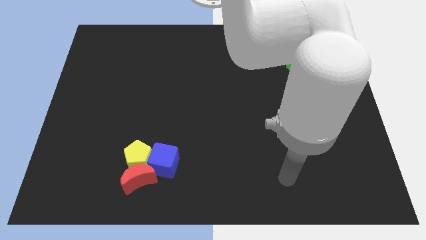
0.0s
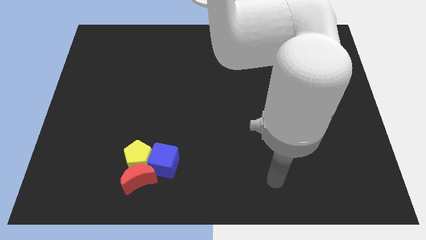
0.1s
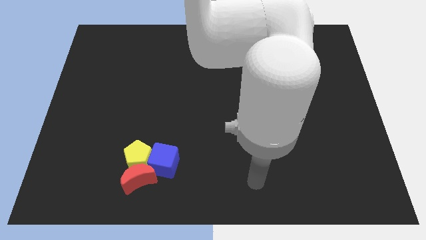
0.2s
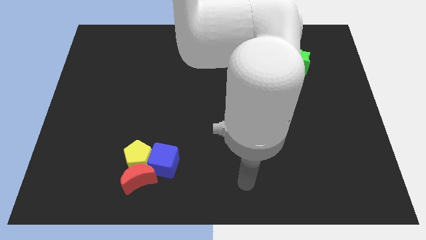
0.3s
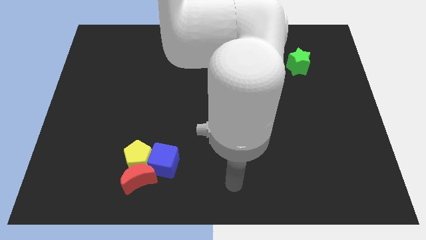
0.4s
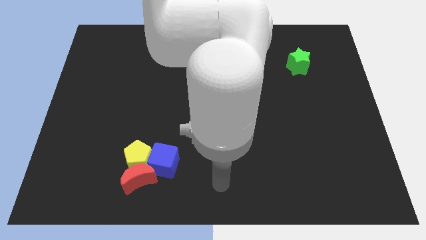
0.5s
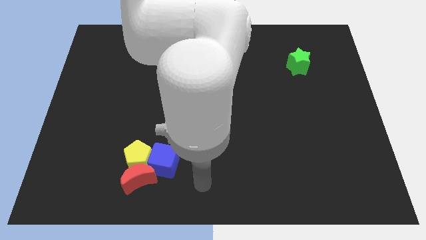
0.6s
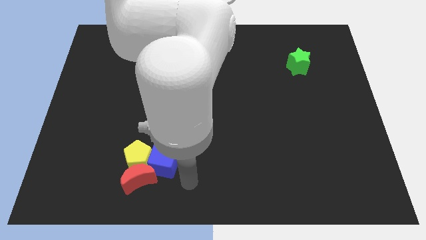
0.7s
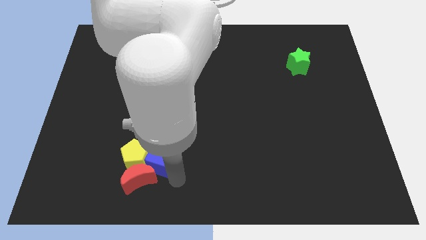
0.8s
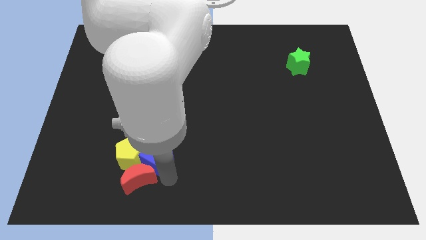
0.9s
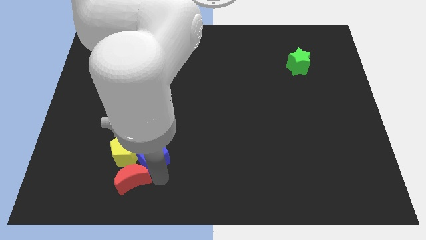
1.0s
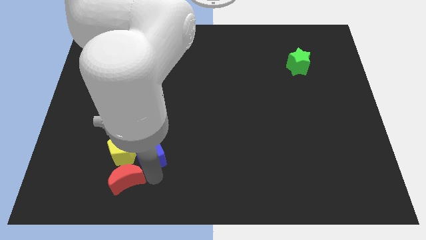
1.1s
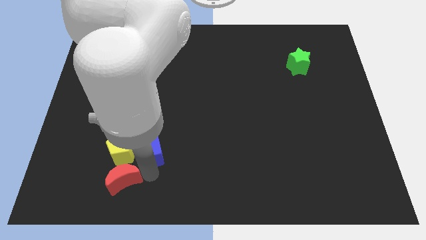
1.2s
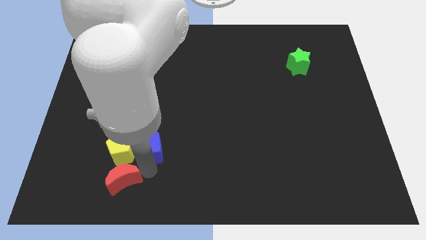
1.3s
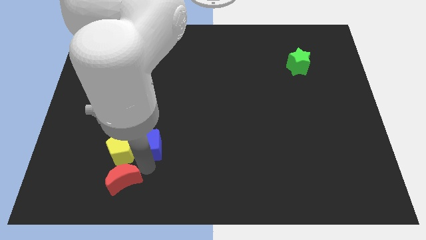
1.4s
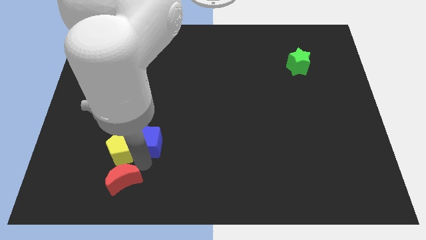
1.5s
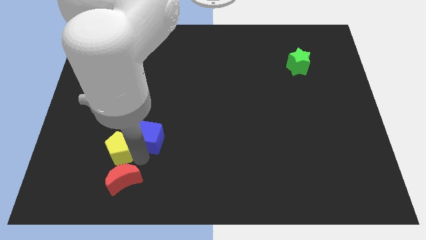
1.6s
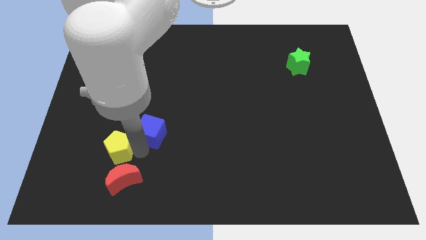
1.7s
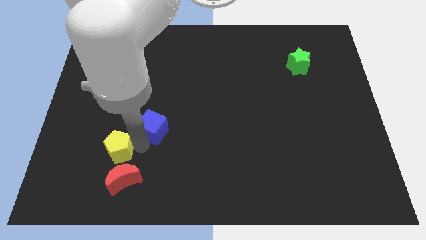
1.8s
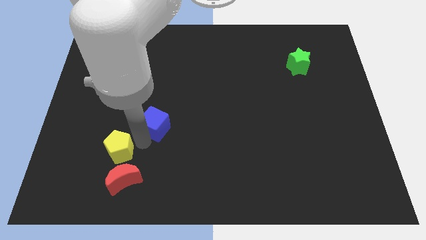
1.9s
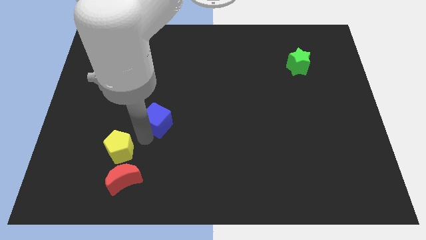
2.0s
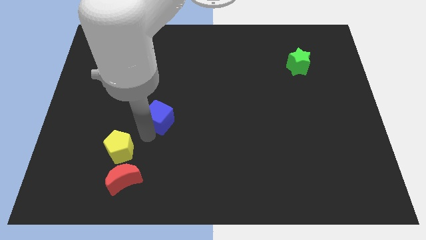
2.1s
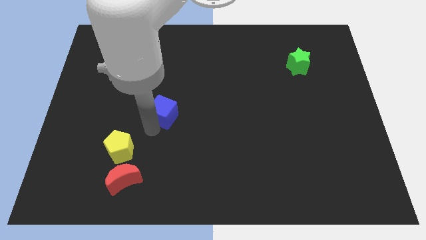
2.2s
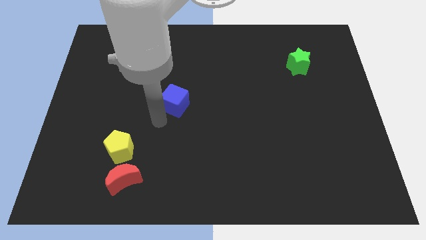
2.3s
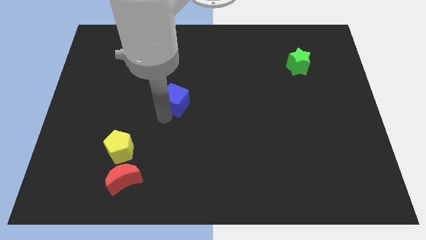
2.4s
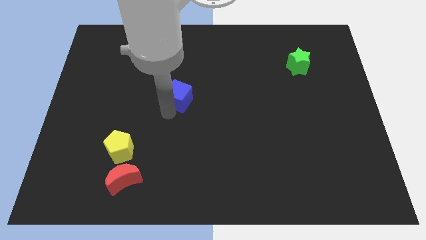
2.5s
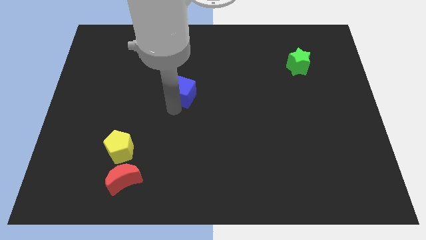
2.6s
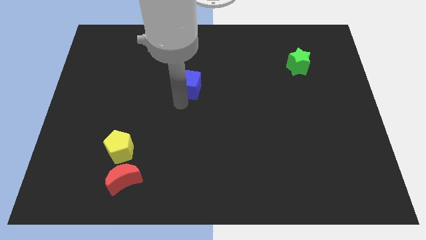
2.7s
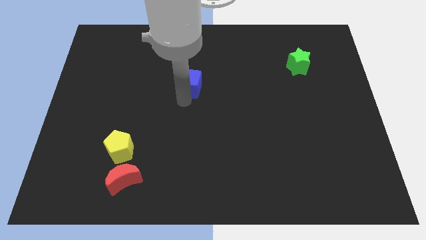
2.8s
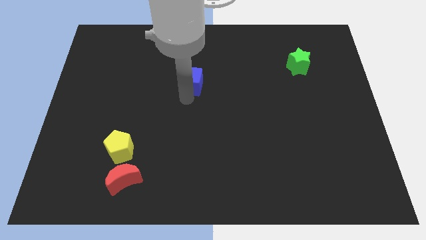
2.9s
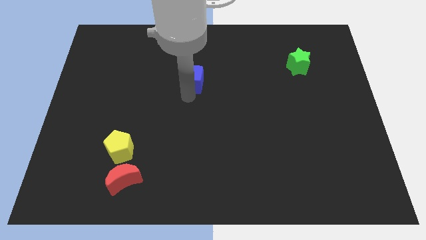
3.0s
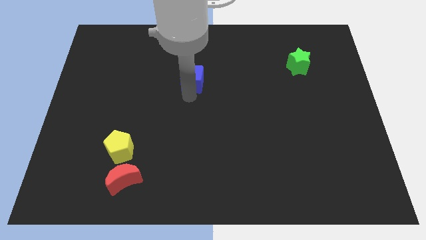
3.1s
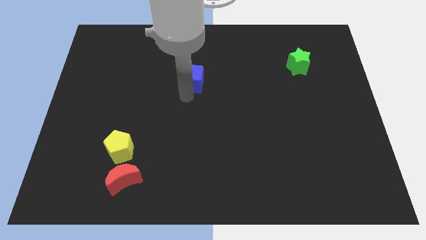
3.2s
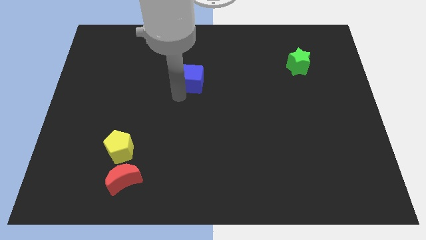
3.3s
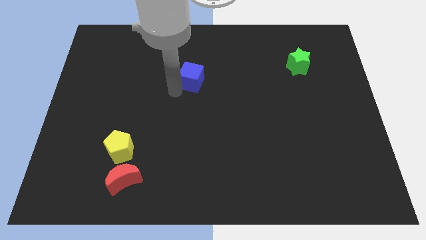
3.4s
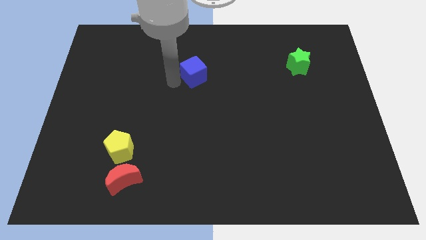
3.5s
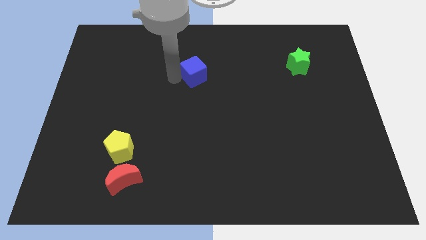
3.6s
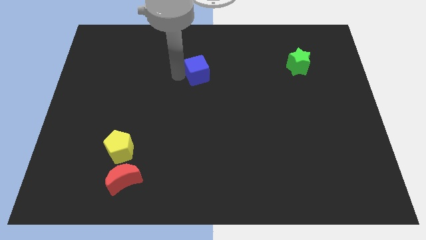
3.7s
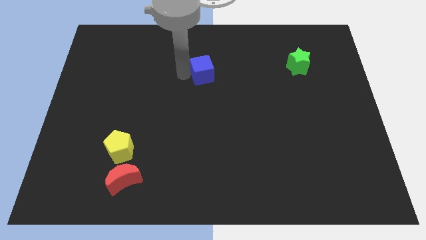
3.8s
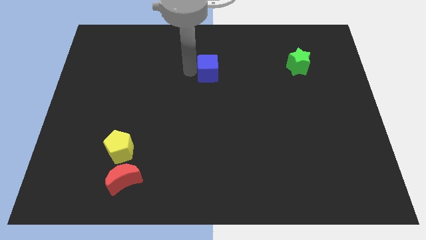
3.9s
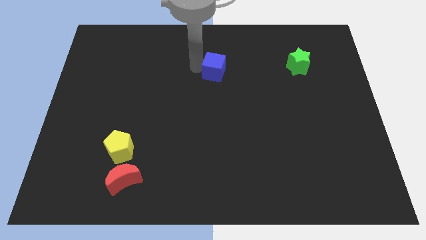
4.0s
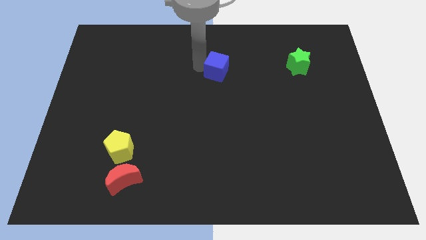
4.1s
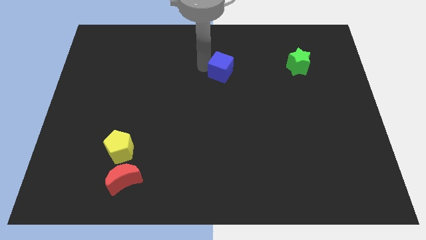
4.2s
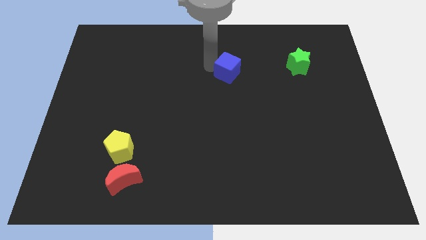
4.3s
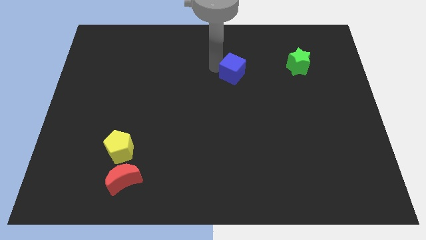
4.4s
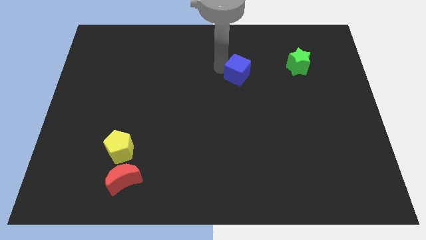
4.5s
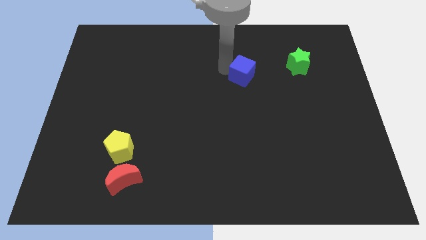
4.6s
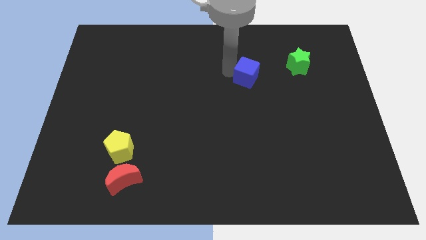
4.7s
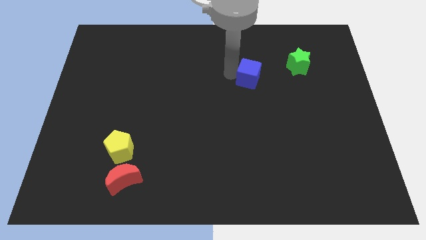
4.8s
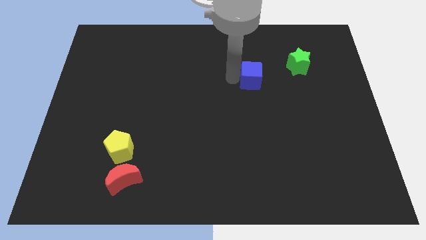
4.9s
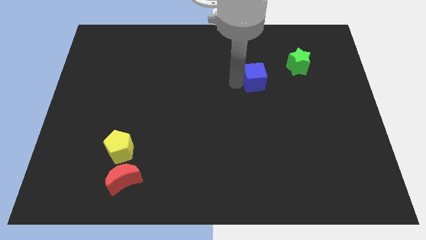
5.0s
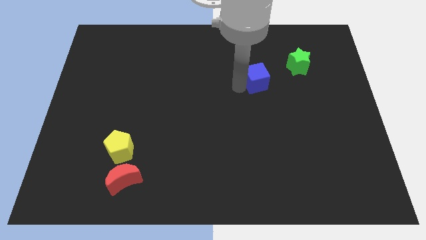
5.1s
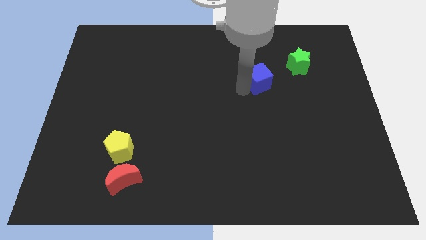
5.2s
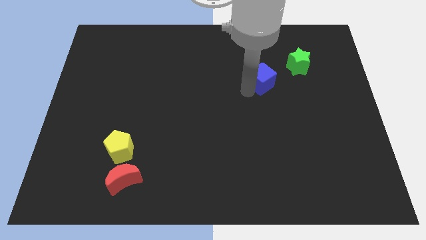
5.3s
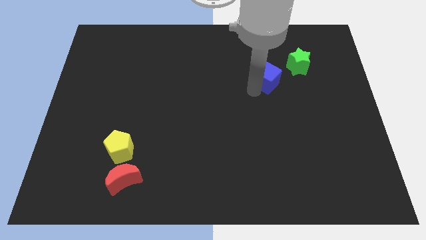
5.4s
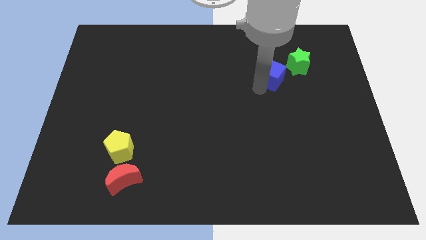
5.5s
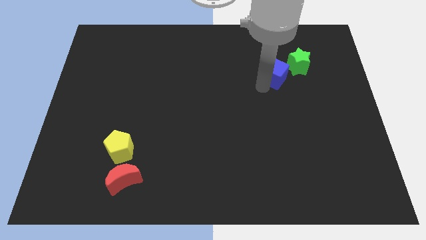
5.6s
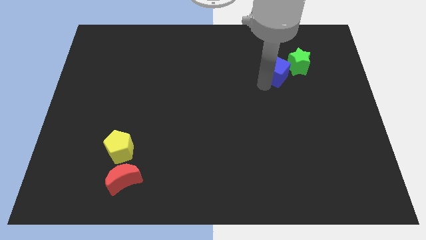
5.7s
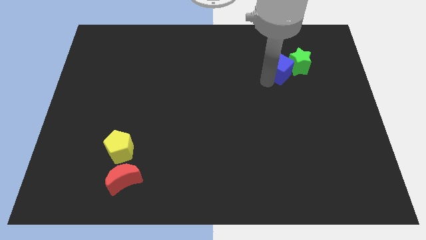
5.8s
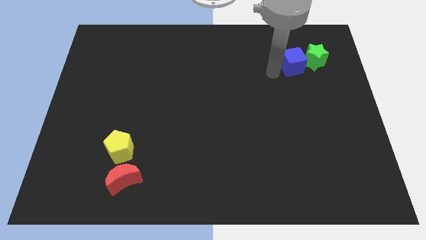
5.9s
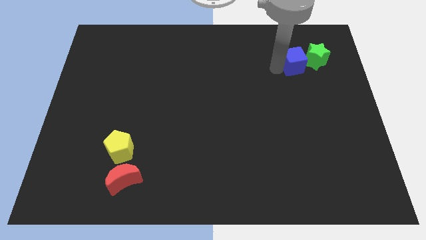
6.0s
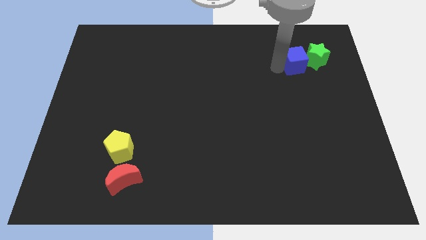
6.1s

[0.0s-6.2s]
move the cube close to the green star

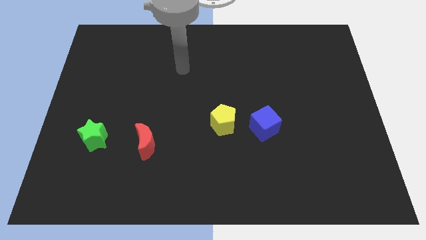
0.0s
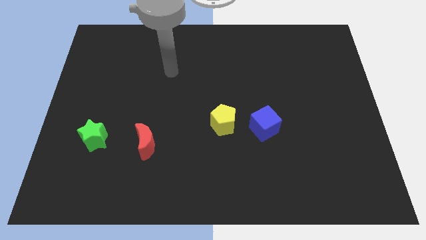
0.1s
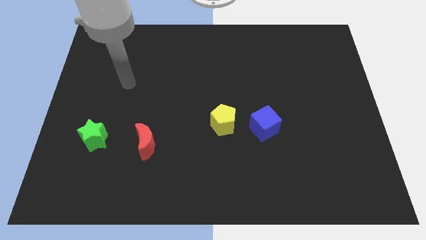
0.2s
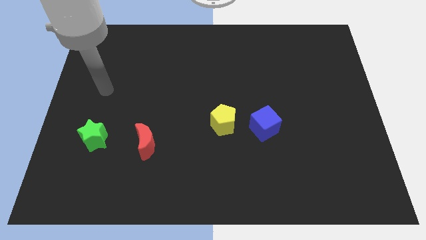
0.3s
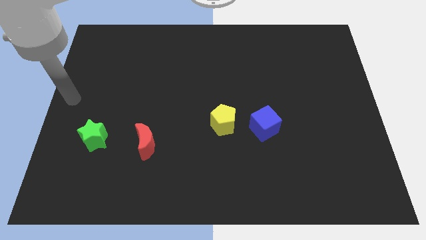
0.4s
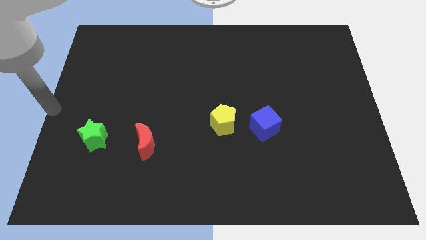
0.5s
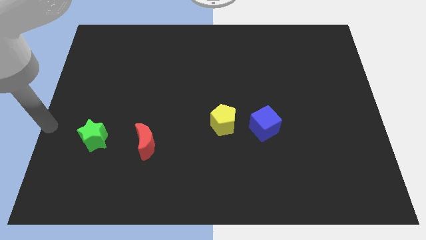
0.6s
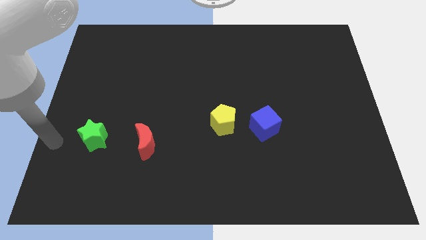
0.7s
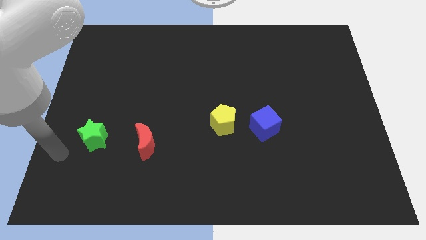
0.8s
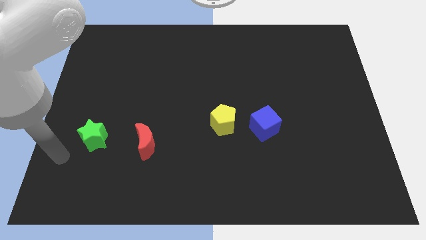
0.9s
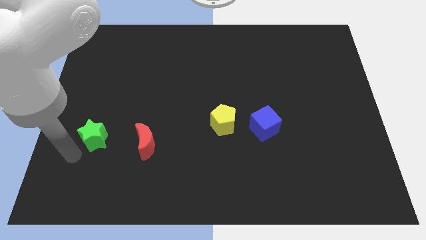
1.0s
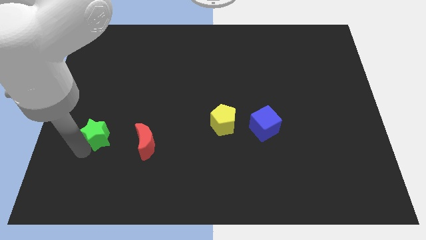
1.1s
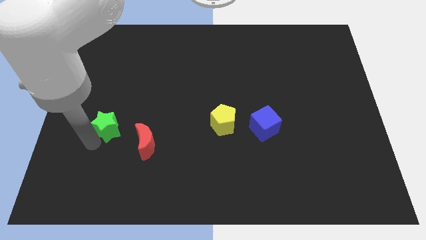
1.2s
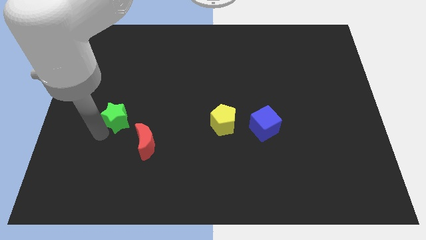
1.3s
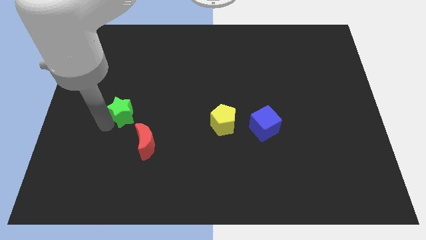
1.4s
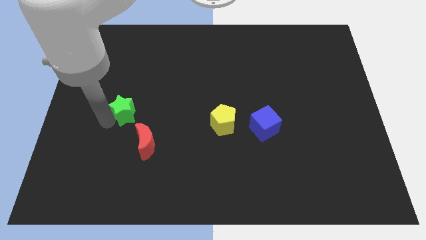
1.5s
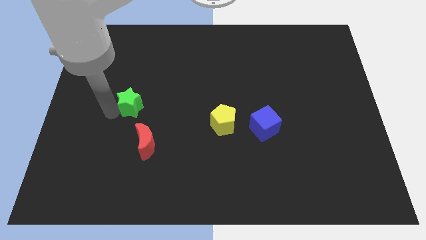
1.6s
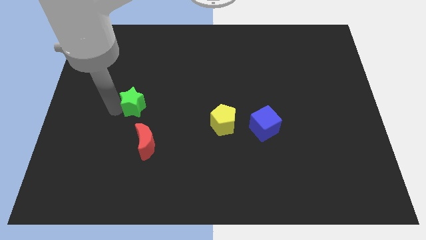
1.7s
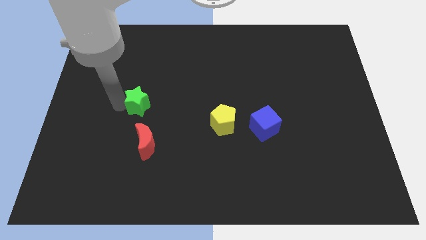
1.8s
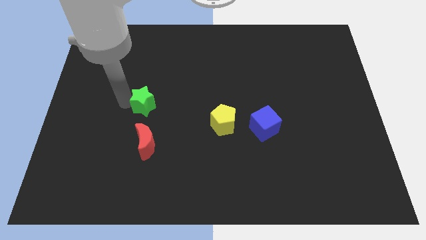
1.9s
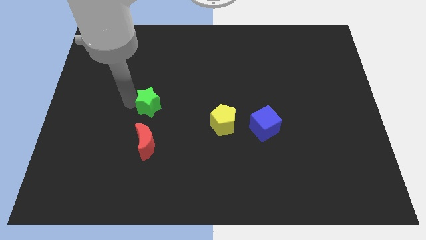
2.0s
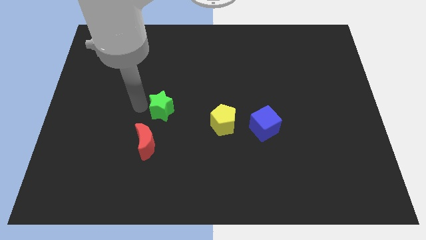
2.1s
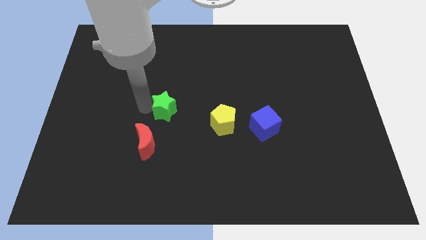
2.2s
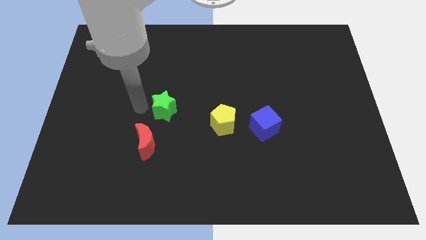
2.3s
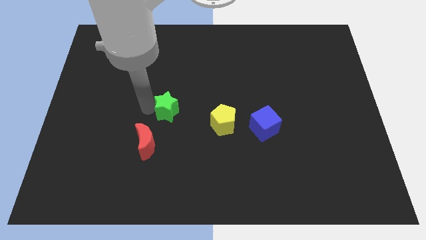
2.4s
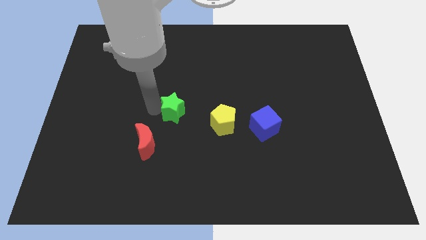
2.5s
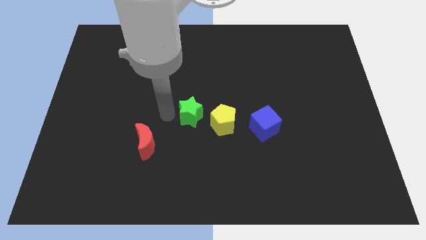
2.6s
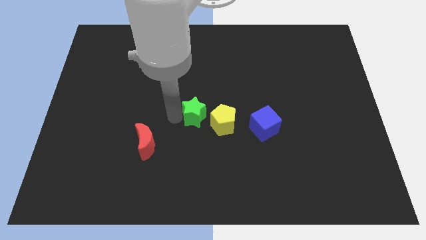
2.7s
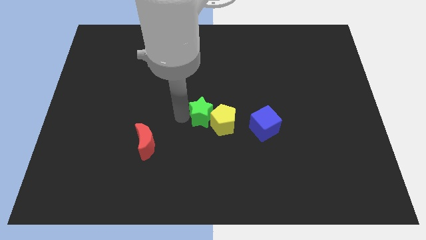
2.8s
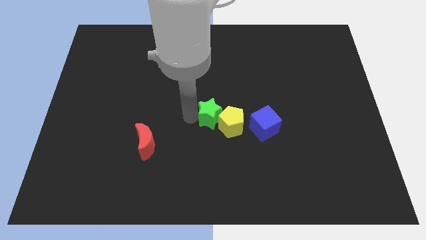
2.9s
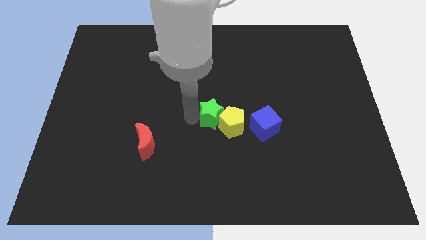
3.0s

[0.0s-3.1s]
push the star towards the yellow pentagon
